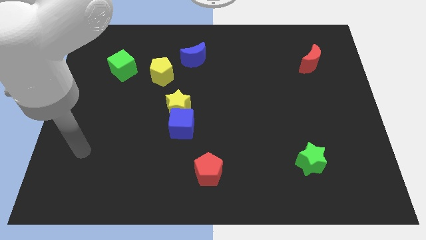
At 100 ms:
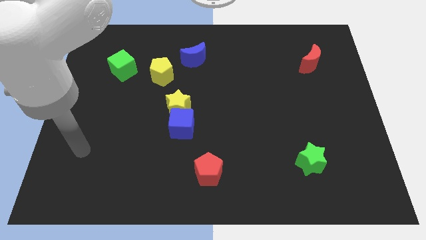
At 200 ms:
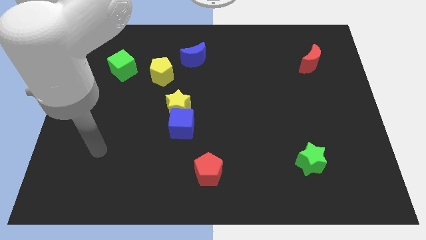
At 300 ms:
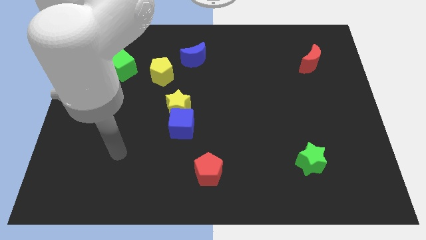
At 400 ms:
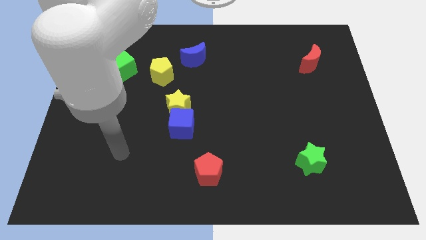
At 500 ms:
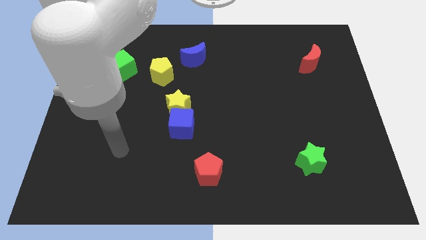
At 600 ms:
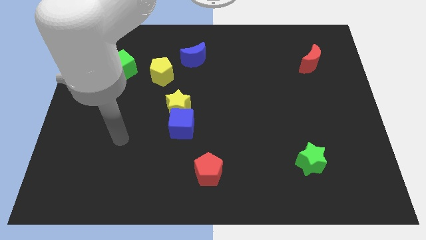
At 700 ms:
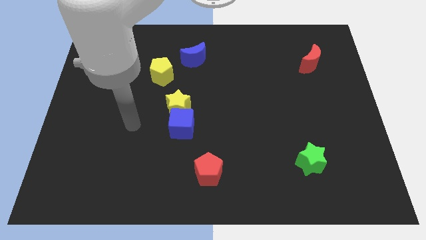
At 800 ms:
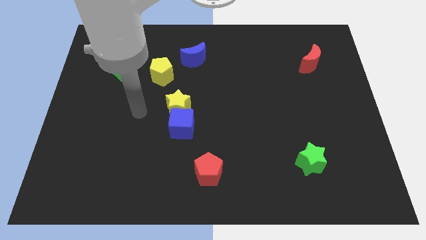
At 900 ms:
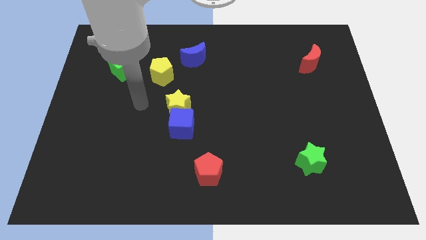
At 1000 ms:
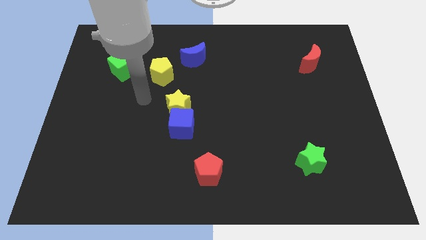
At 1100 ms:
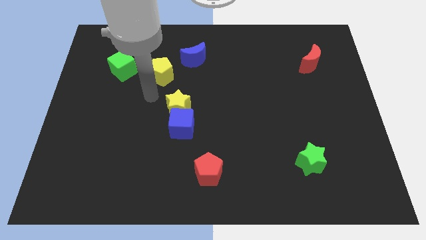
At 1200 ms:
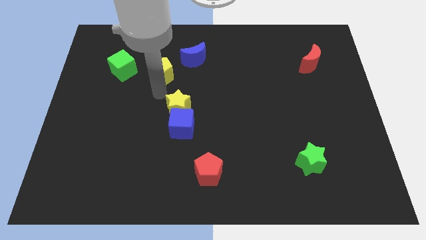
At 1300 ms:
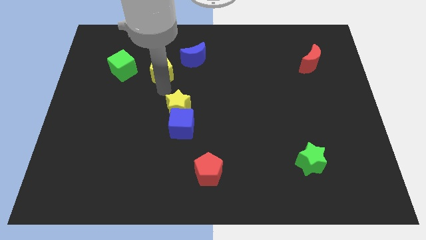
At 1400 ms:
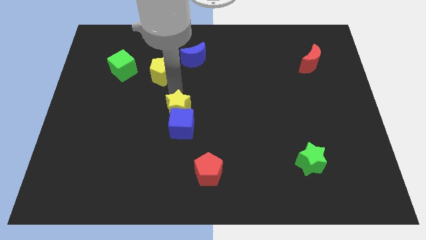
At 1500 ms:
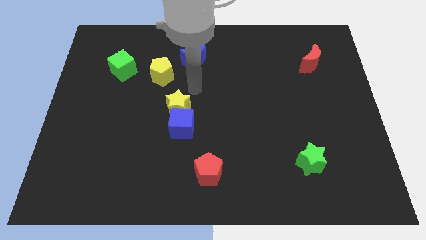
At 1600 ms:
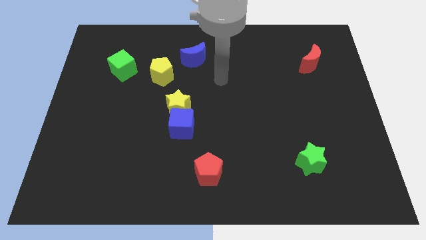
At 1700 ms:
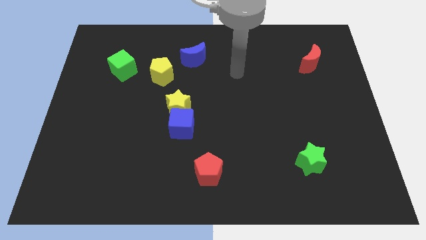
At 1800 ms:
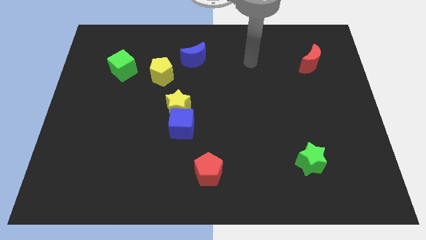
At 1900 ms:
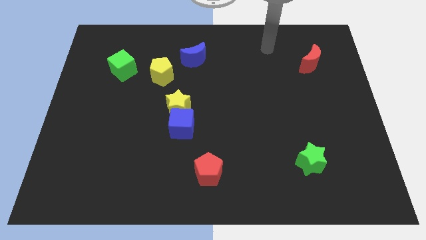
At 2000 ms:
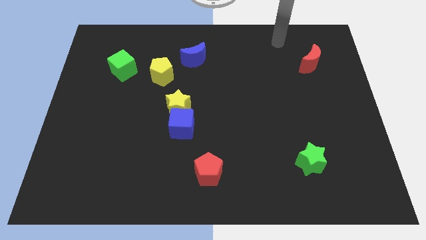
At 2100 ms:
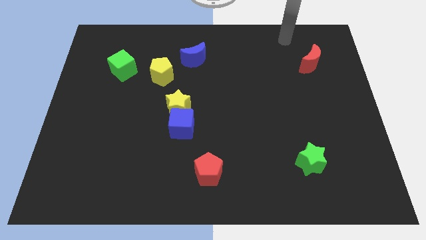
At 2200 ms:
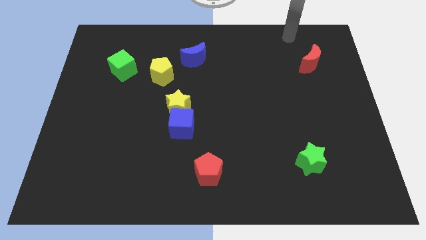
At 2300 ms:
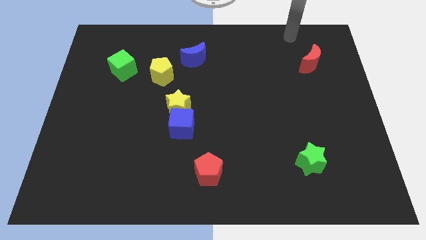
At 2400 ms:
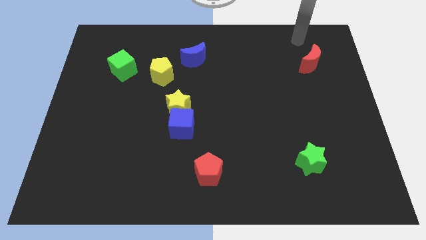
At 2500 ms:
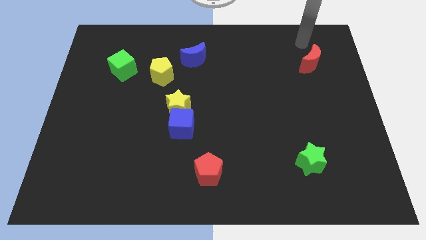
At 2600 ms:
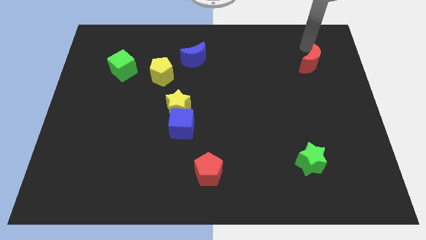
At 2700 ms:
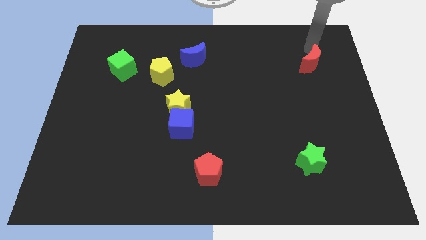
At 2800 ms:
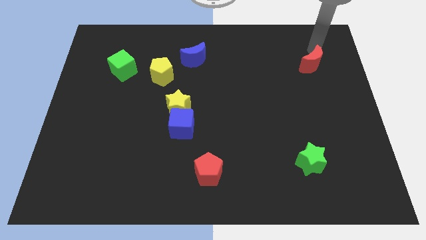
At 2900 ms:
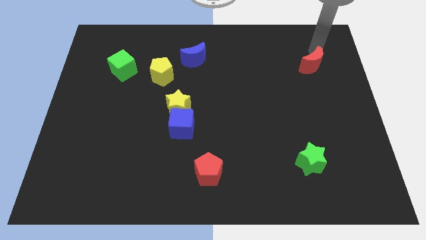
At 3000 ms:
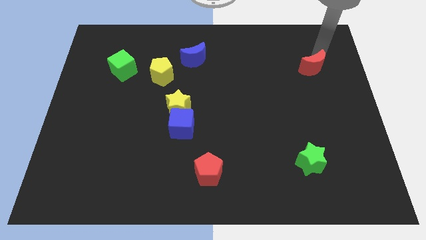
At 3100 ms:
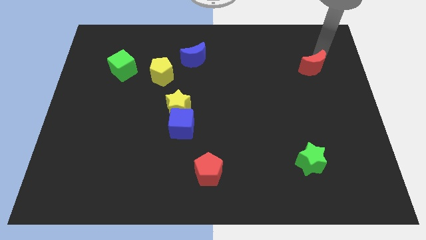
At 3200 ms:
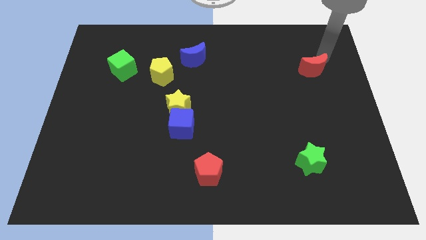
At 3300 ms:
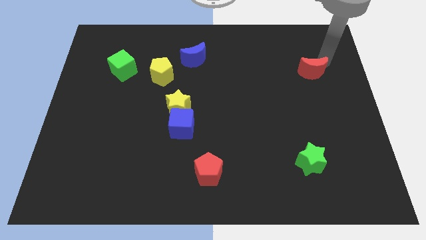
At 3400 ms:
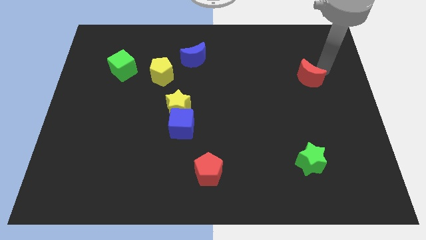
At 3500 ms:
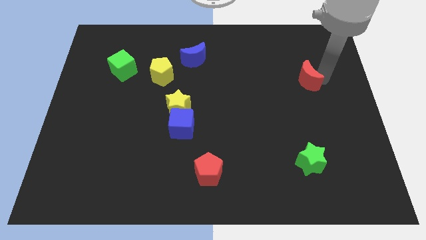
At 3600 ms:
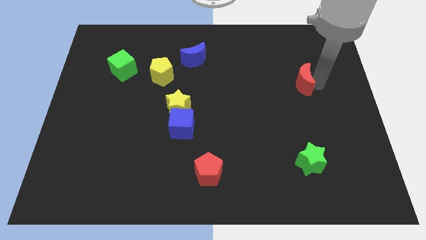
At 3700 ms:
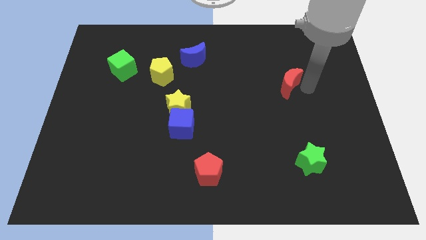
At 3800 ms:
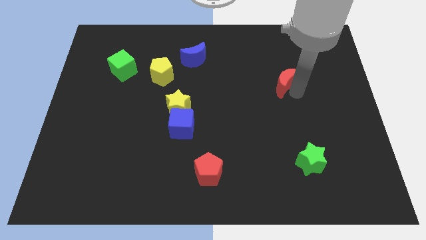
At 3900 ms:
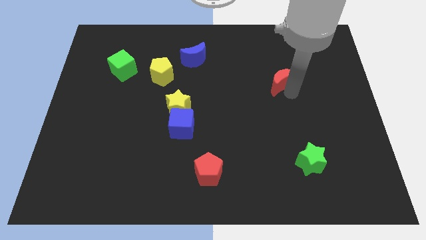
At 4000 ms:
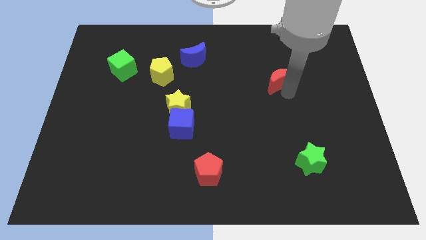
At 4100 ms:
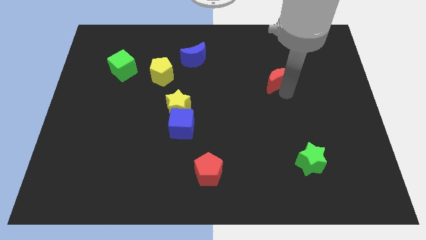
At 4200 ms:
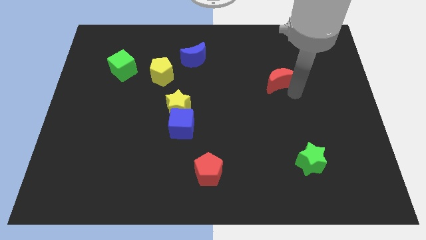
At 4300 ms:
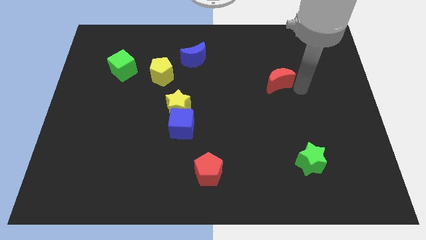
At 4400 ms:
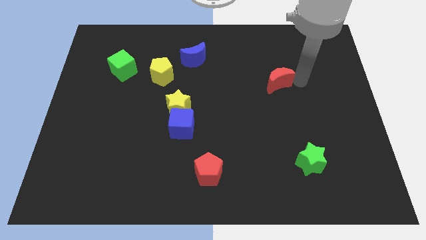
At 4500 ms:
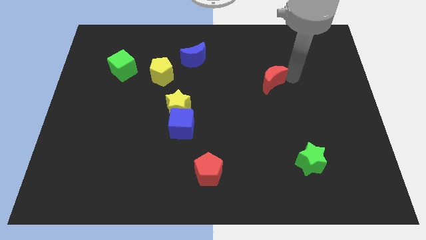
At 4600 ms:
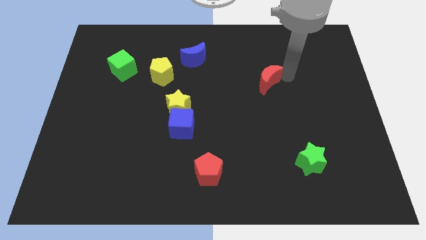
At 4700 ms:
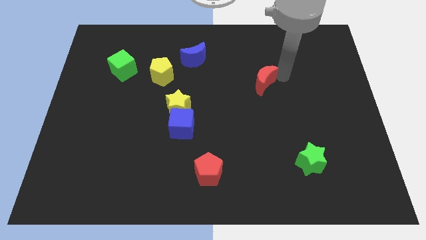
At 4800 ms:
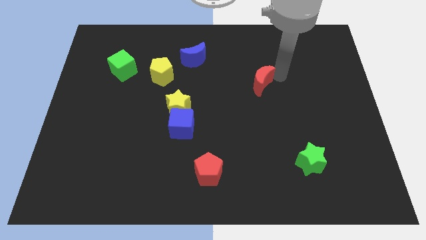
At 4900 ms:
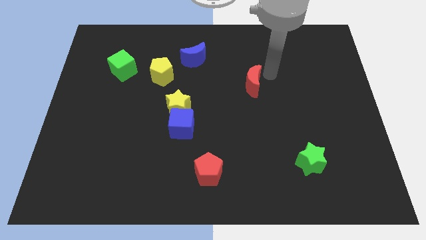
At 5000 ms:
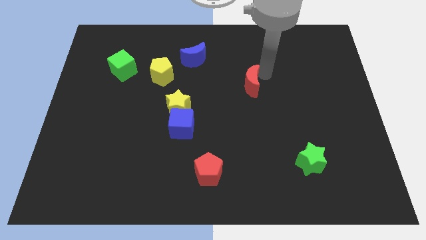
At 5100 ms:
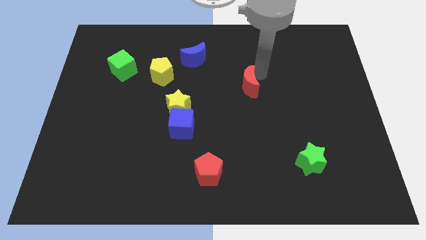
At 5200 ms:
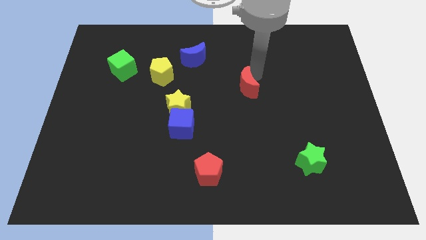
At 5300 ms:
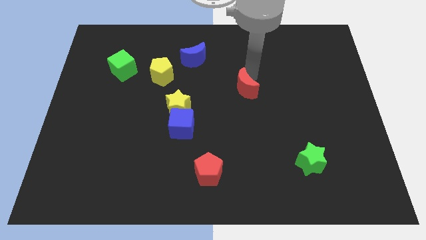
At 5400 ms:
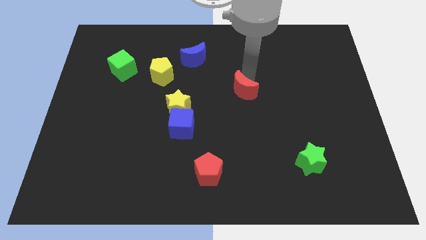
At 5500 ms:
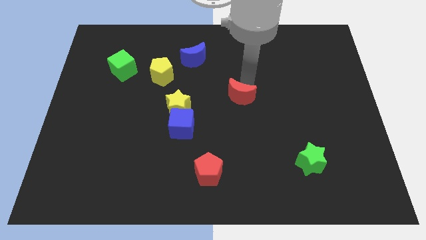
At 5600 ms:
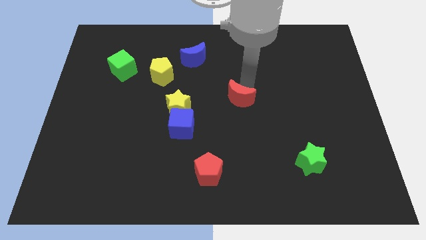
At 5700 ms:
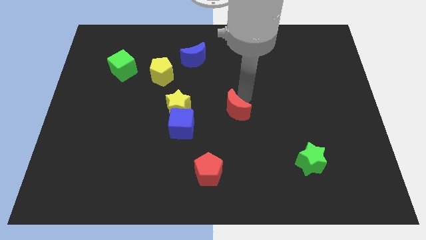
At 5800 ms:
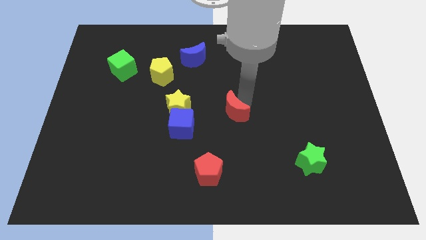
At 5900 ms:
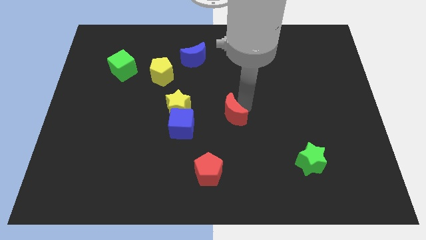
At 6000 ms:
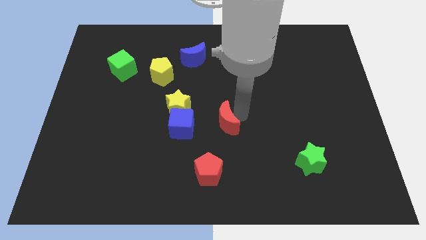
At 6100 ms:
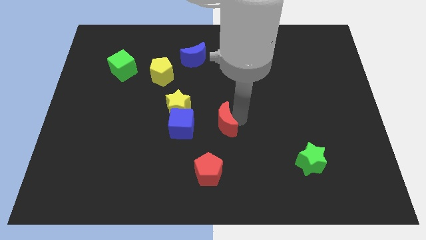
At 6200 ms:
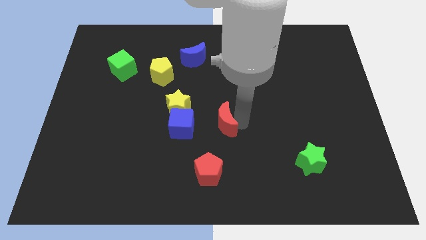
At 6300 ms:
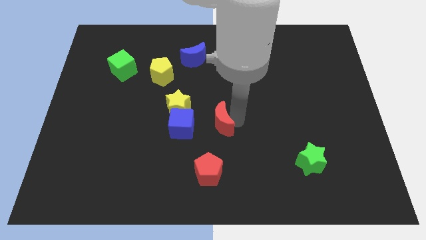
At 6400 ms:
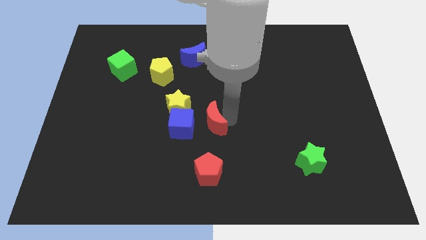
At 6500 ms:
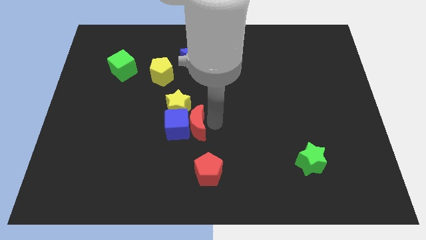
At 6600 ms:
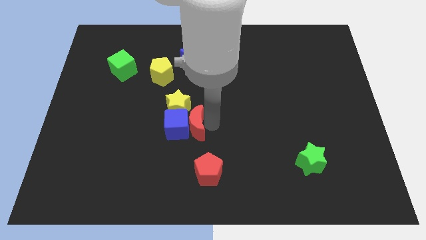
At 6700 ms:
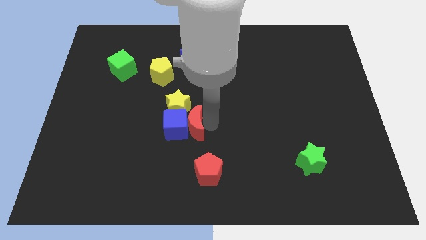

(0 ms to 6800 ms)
put the red moon towards the blue cube

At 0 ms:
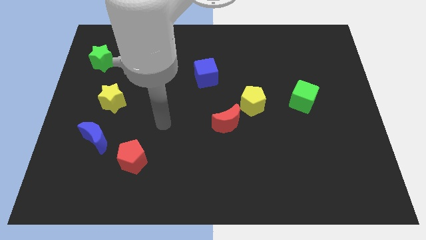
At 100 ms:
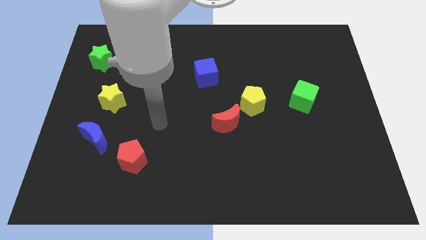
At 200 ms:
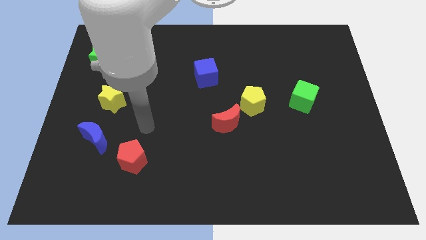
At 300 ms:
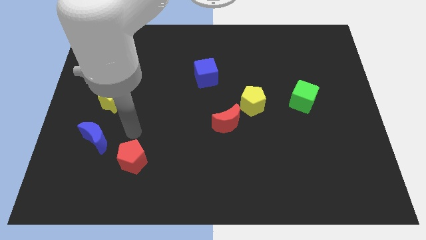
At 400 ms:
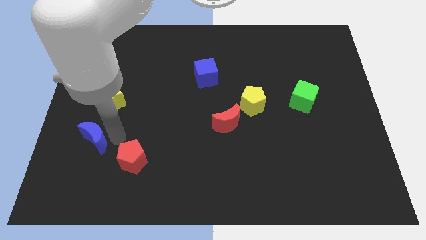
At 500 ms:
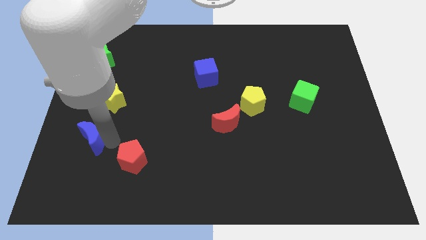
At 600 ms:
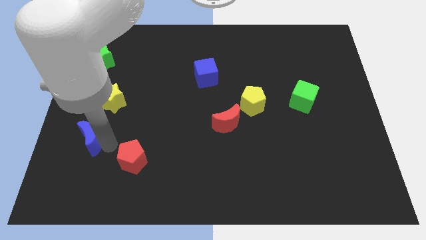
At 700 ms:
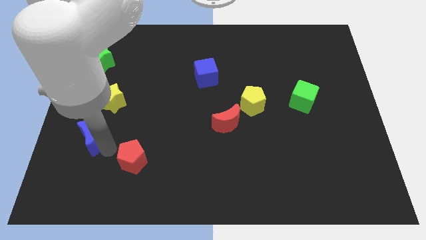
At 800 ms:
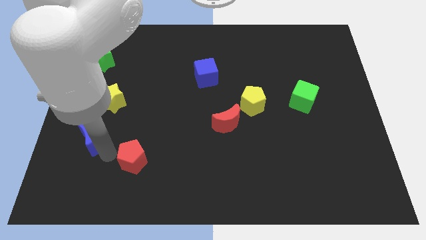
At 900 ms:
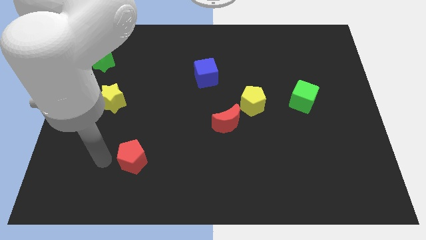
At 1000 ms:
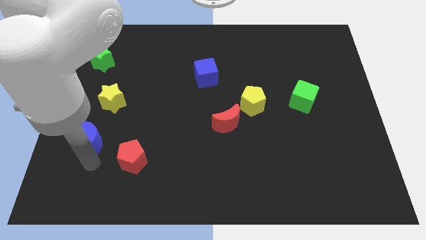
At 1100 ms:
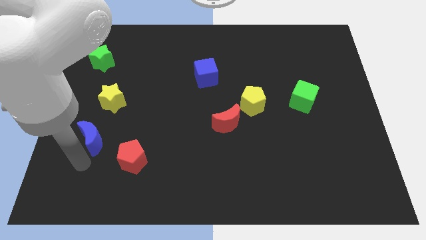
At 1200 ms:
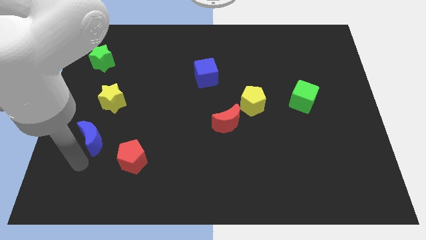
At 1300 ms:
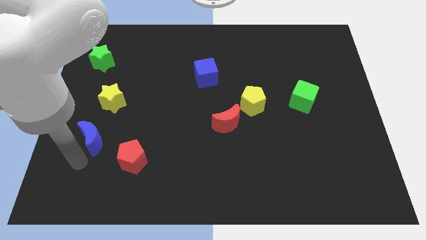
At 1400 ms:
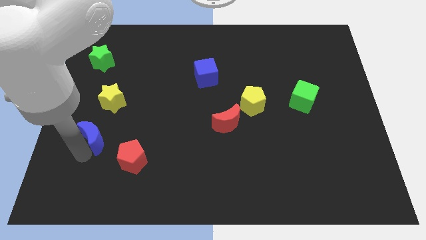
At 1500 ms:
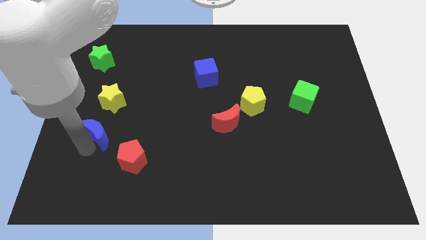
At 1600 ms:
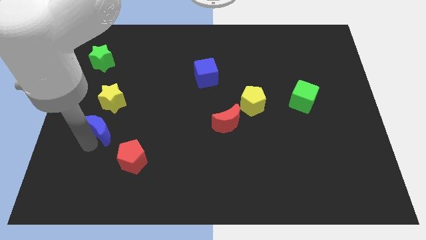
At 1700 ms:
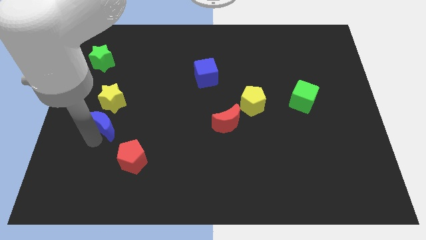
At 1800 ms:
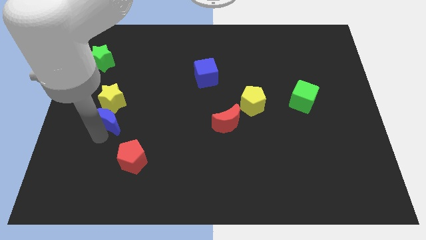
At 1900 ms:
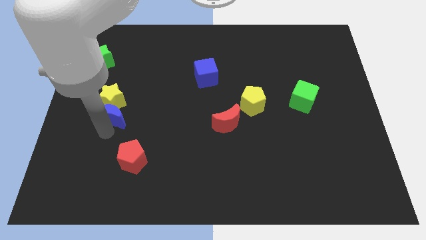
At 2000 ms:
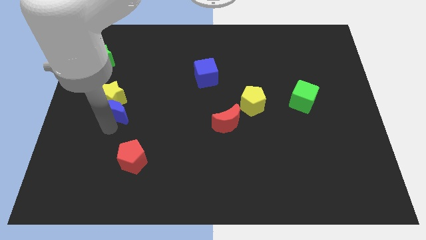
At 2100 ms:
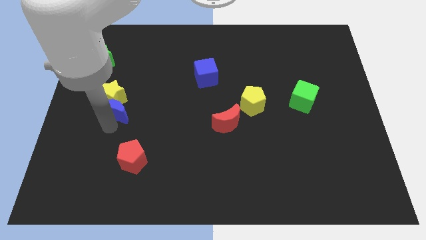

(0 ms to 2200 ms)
put the blue moon next to the yellow star
